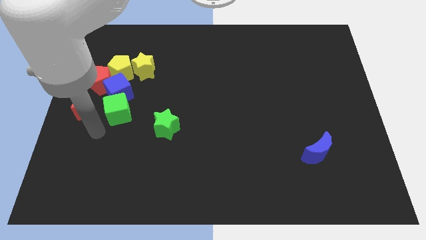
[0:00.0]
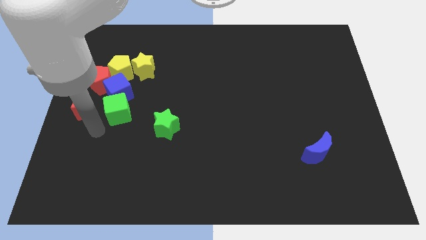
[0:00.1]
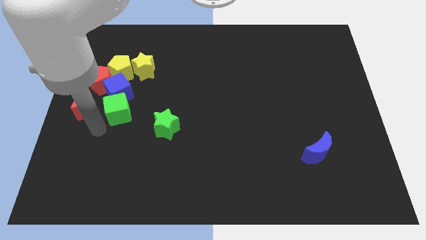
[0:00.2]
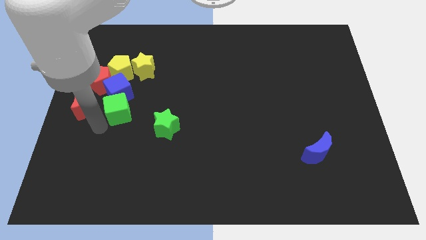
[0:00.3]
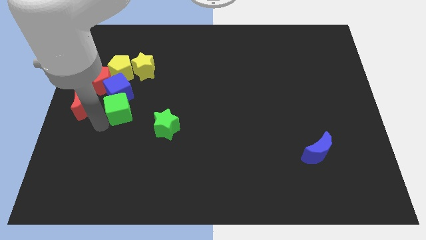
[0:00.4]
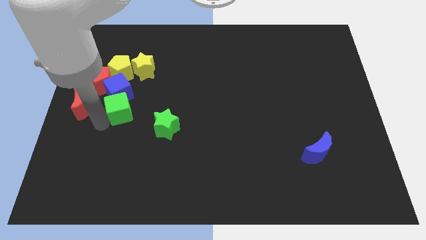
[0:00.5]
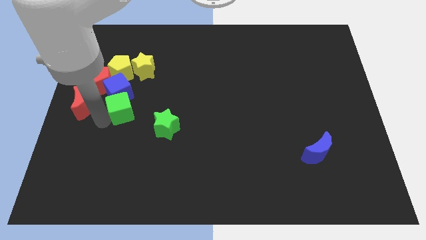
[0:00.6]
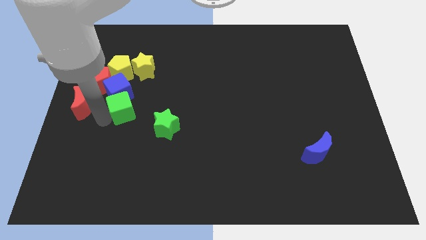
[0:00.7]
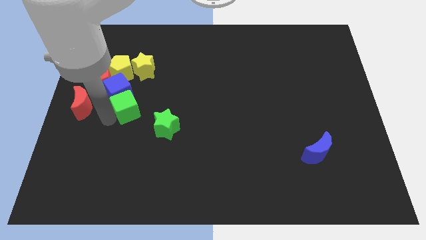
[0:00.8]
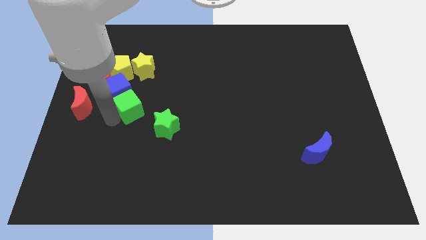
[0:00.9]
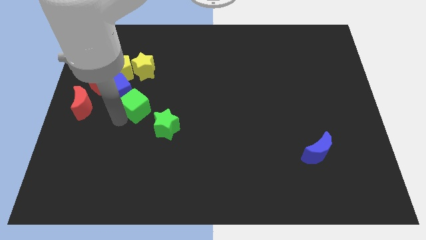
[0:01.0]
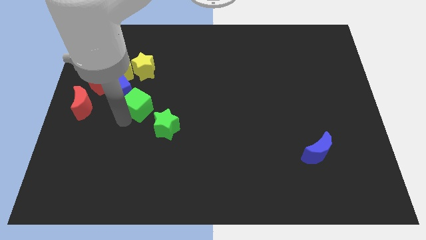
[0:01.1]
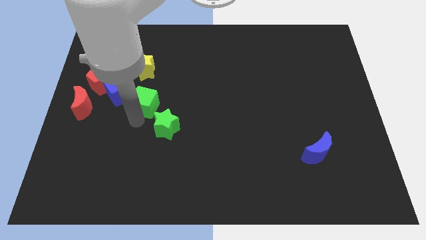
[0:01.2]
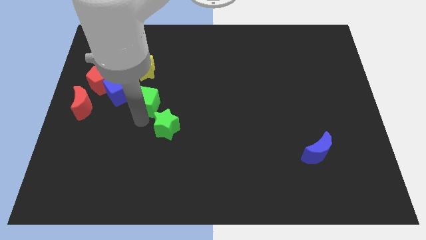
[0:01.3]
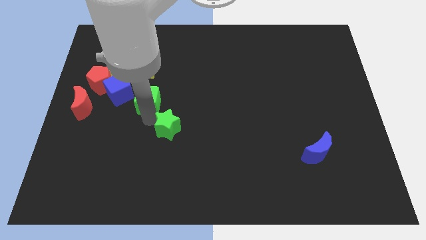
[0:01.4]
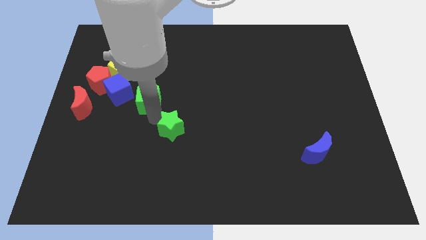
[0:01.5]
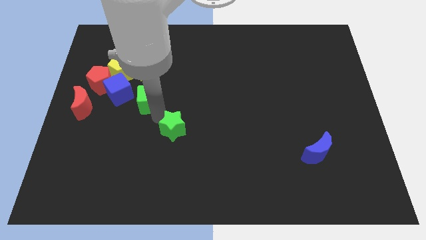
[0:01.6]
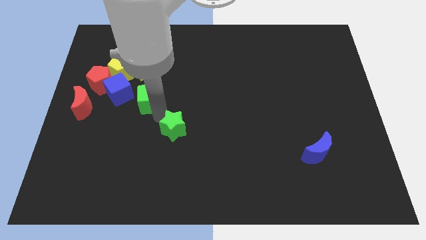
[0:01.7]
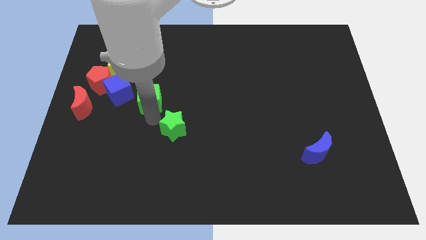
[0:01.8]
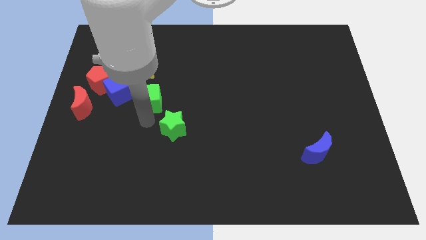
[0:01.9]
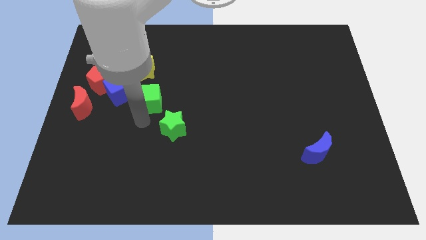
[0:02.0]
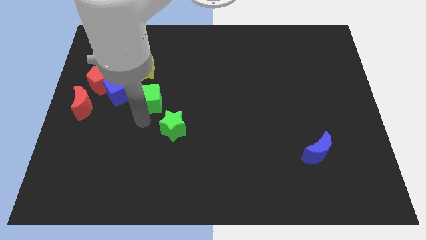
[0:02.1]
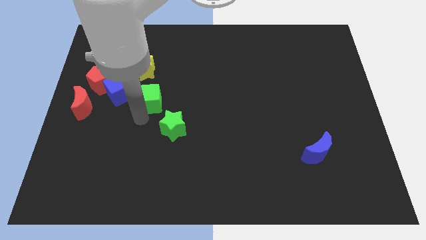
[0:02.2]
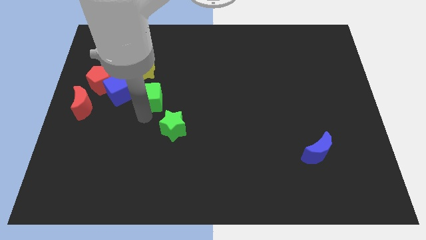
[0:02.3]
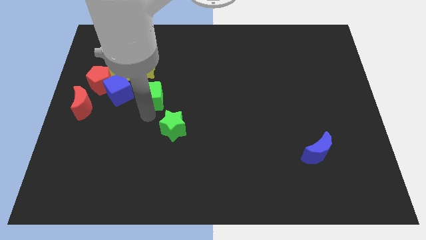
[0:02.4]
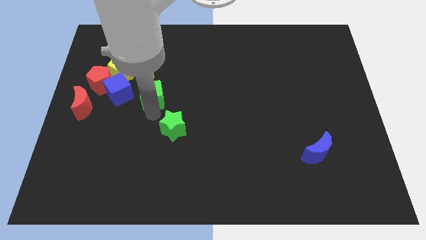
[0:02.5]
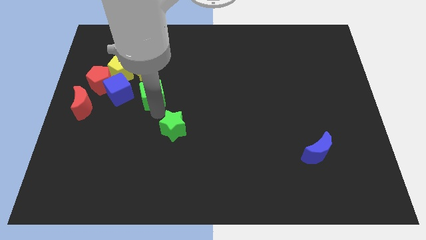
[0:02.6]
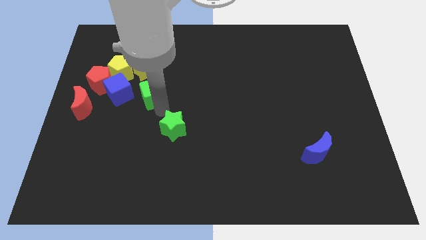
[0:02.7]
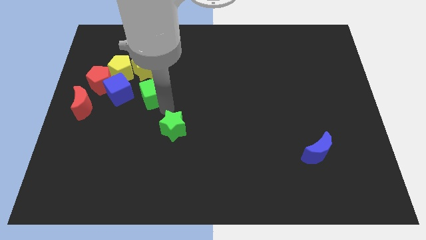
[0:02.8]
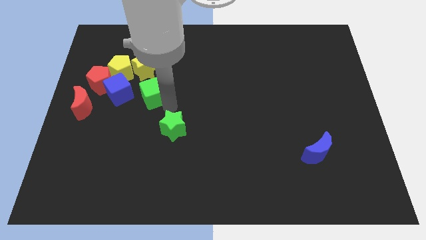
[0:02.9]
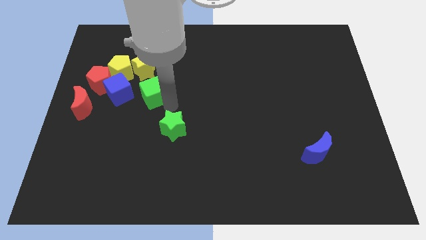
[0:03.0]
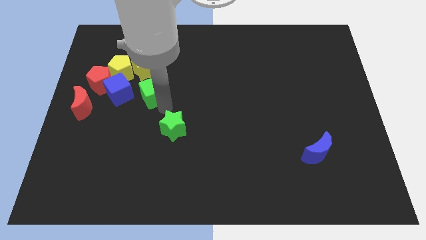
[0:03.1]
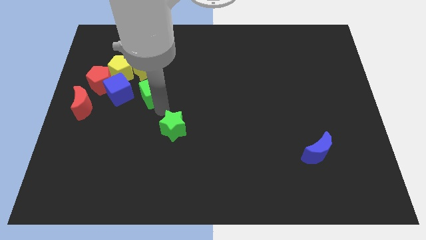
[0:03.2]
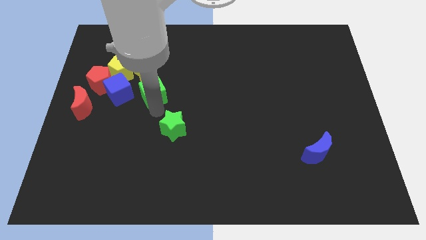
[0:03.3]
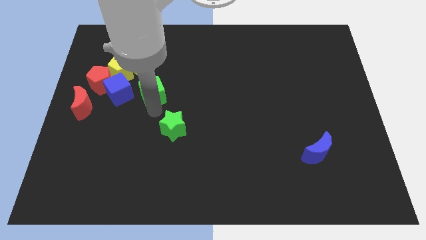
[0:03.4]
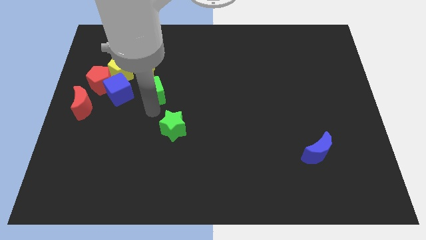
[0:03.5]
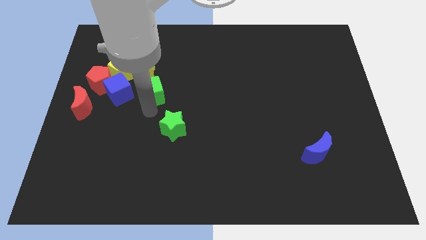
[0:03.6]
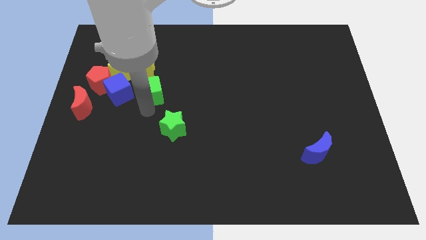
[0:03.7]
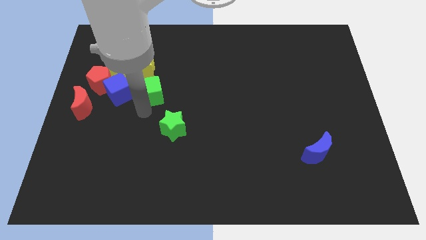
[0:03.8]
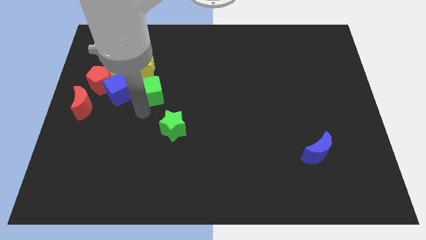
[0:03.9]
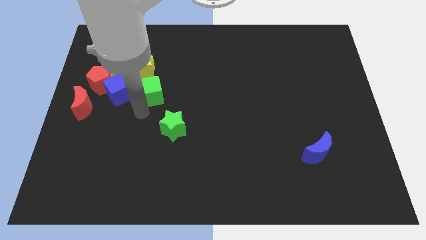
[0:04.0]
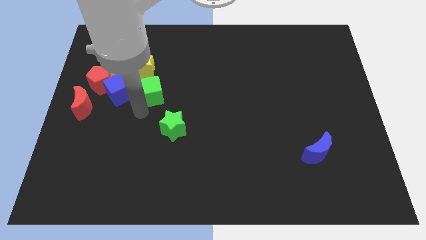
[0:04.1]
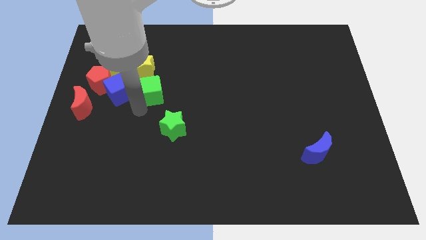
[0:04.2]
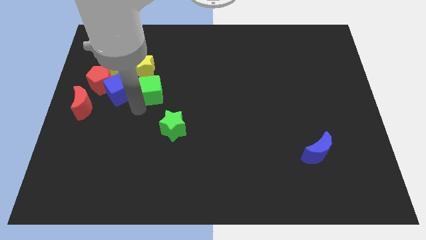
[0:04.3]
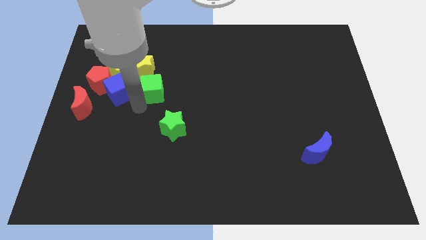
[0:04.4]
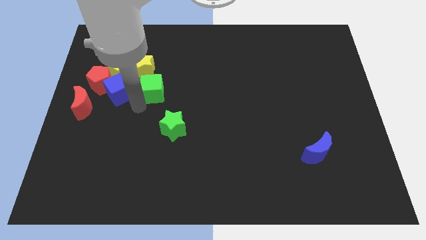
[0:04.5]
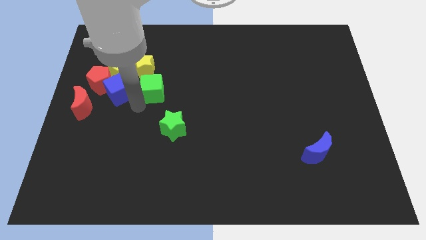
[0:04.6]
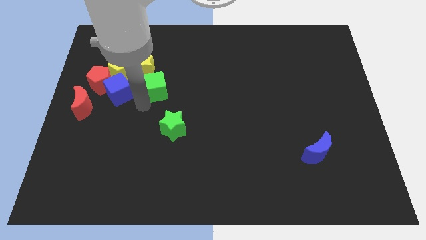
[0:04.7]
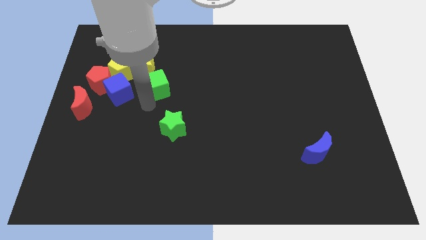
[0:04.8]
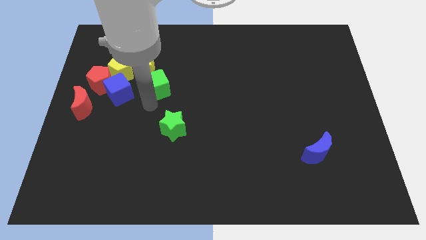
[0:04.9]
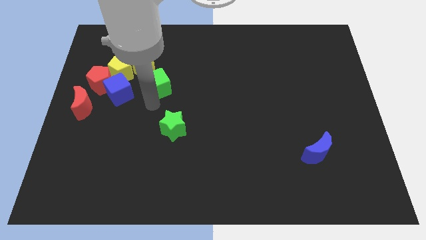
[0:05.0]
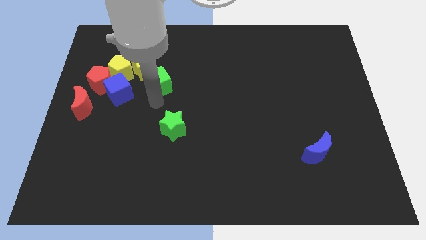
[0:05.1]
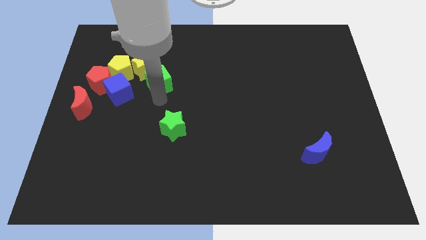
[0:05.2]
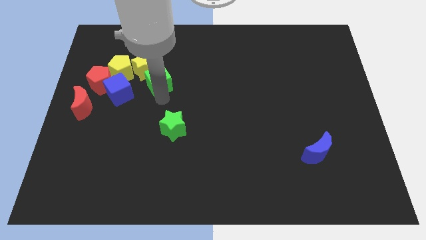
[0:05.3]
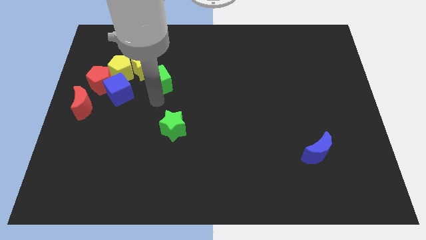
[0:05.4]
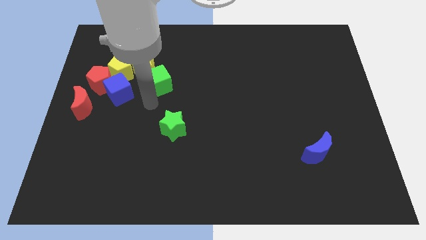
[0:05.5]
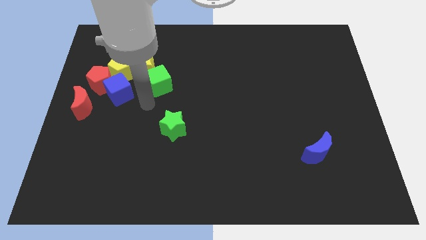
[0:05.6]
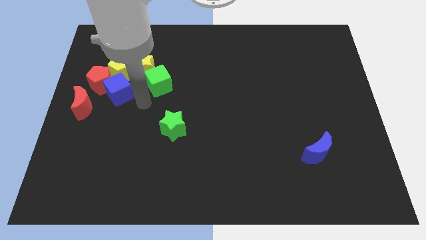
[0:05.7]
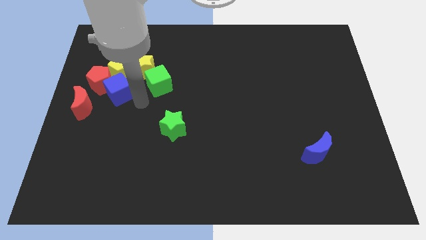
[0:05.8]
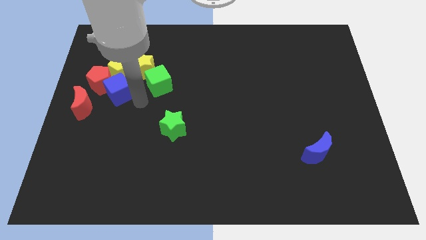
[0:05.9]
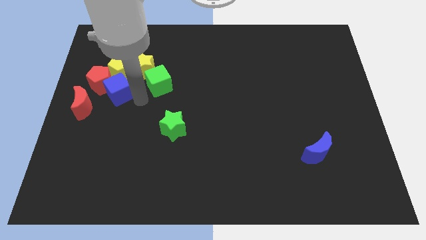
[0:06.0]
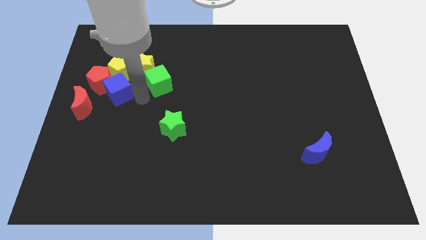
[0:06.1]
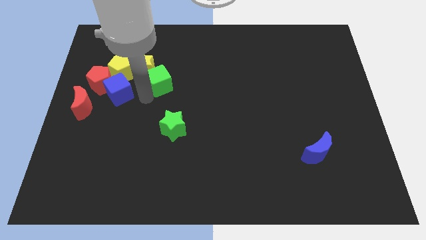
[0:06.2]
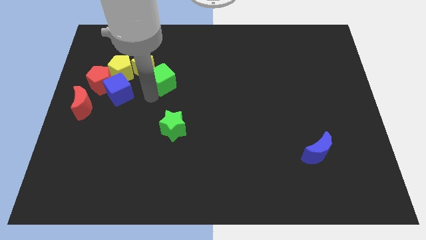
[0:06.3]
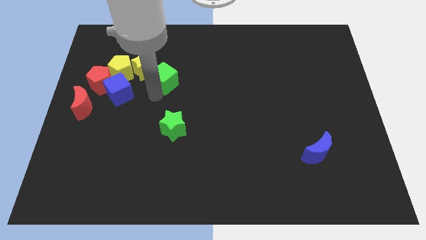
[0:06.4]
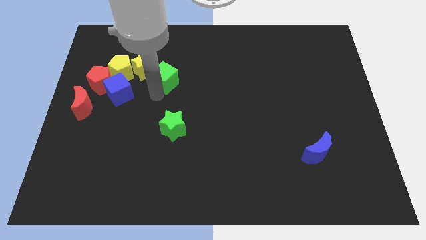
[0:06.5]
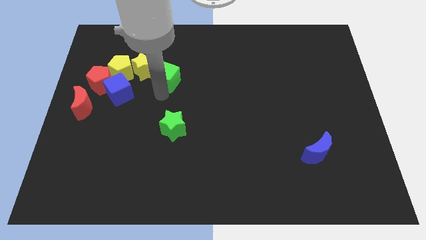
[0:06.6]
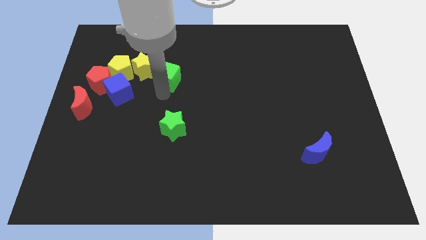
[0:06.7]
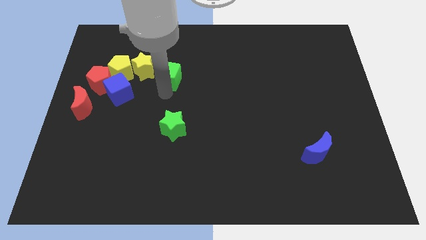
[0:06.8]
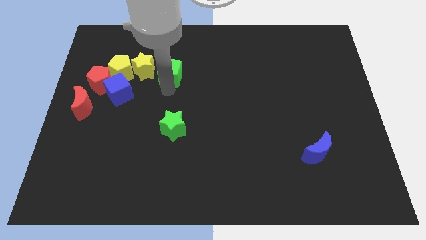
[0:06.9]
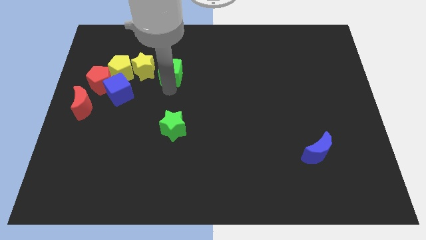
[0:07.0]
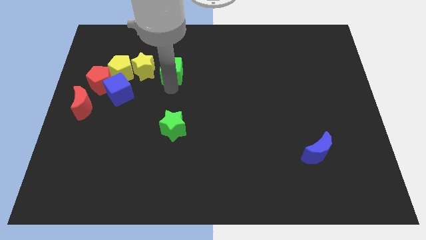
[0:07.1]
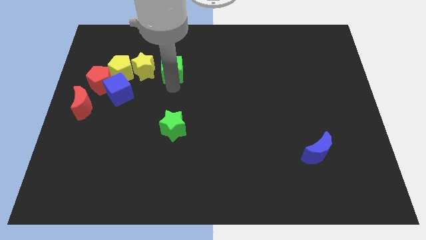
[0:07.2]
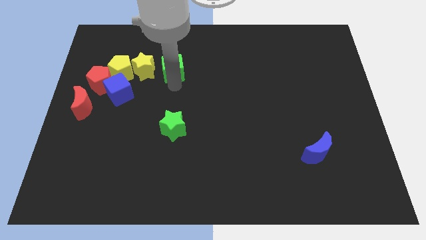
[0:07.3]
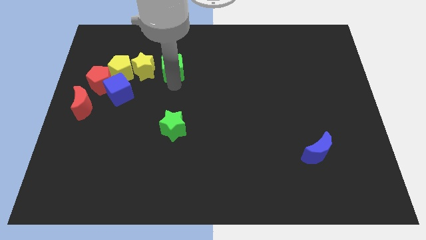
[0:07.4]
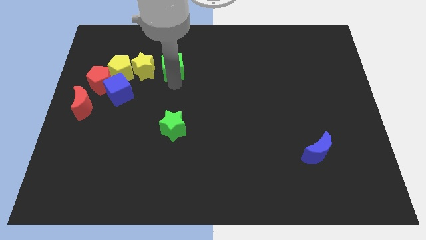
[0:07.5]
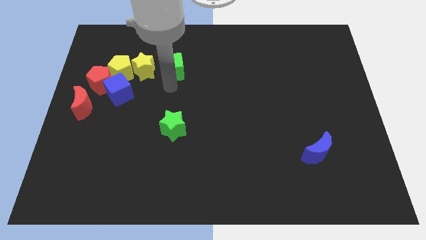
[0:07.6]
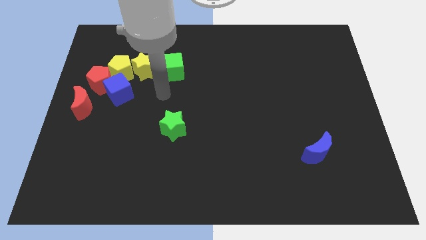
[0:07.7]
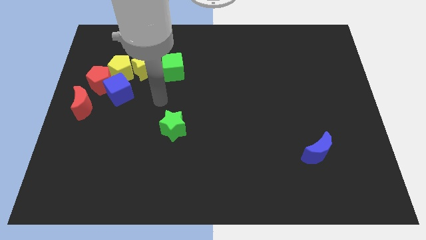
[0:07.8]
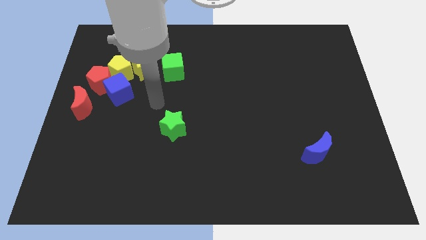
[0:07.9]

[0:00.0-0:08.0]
push the green cube to the right side of the yellow star

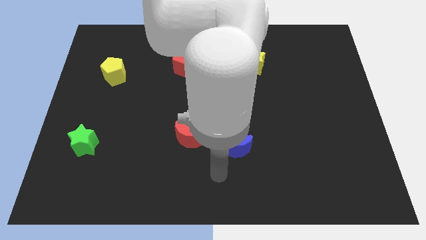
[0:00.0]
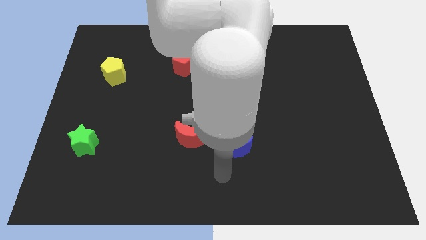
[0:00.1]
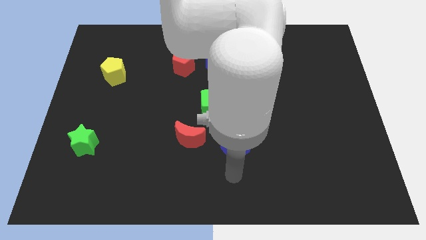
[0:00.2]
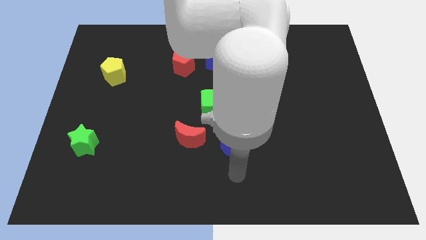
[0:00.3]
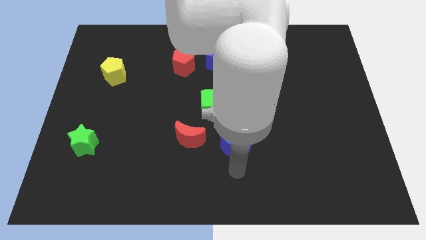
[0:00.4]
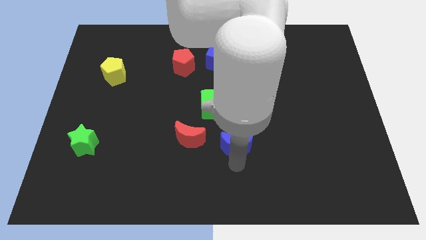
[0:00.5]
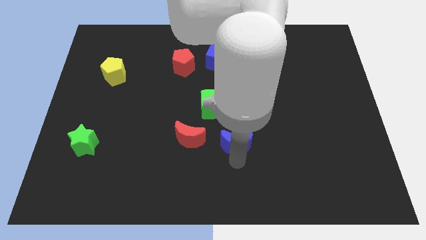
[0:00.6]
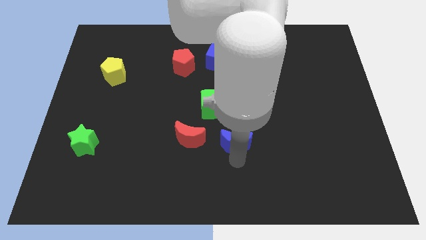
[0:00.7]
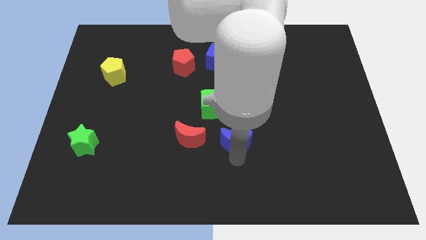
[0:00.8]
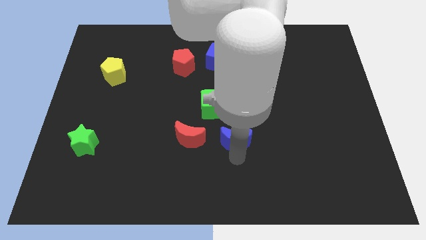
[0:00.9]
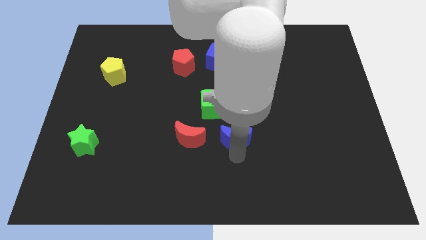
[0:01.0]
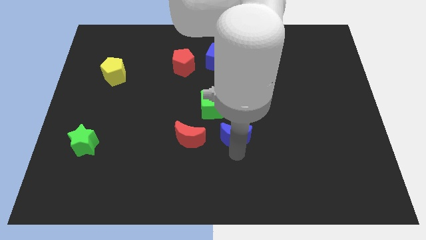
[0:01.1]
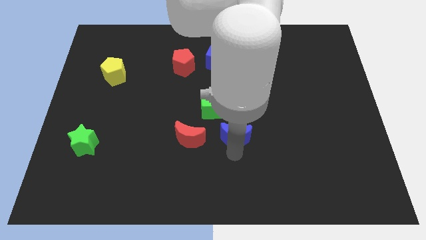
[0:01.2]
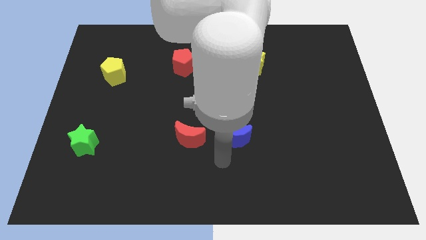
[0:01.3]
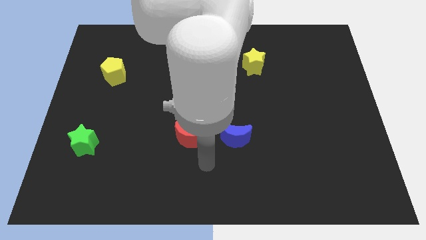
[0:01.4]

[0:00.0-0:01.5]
place red moon and blue moon parallel to each other
